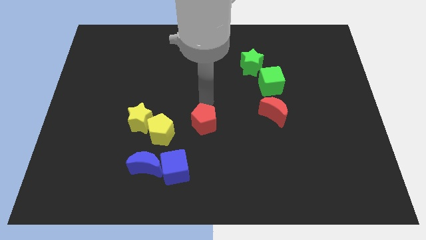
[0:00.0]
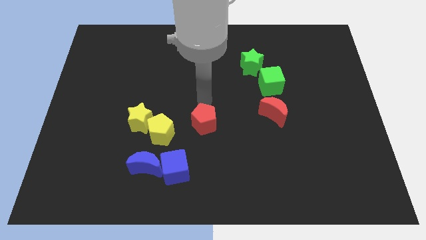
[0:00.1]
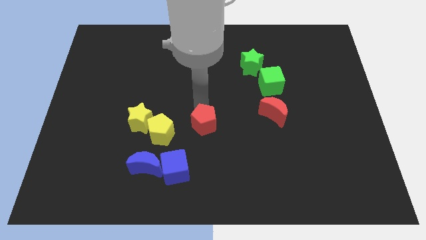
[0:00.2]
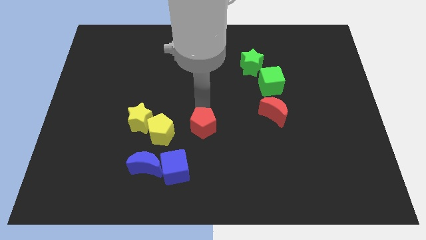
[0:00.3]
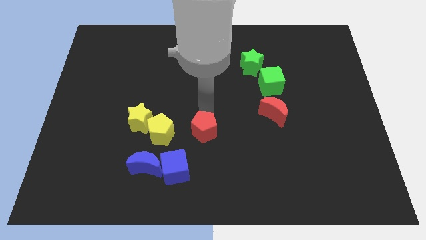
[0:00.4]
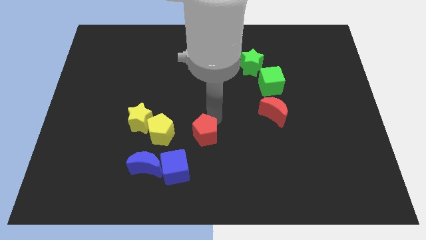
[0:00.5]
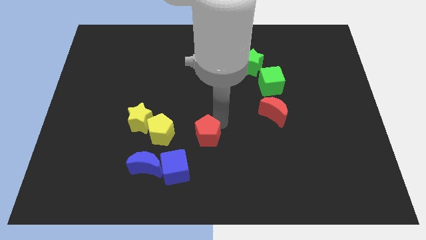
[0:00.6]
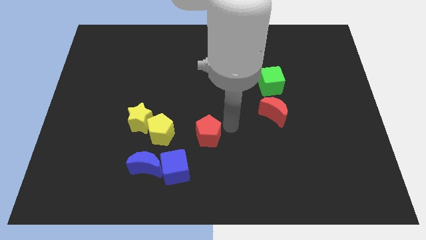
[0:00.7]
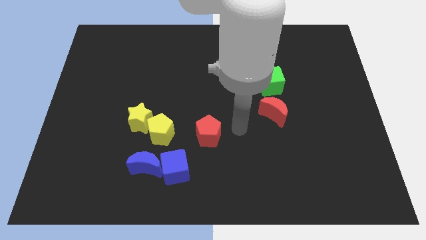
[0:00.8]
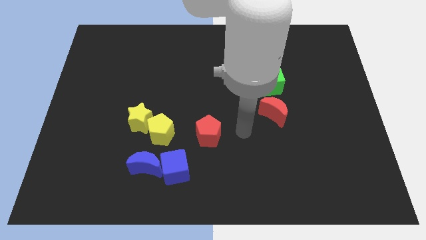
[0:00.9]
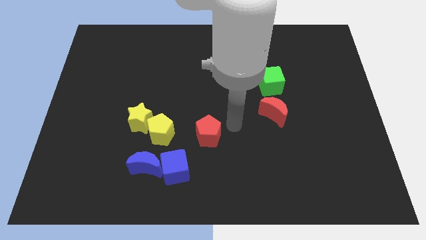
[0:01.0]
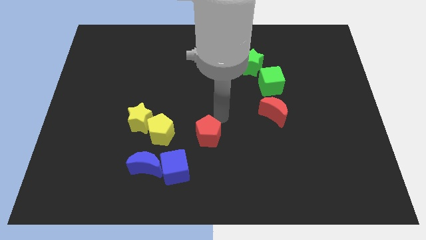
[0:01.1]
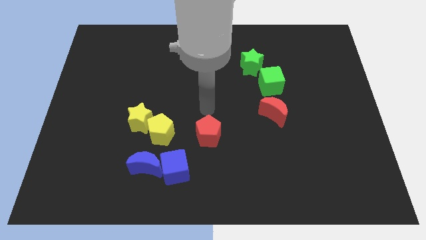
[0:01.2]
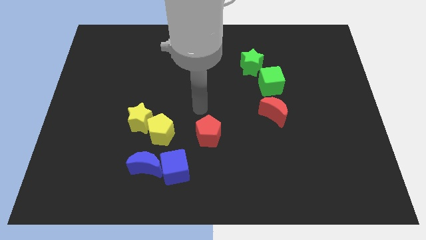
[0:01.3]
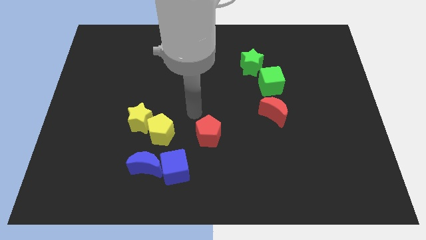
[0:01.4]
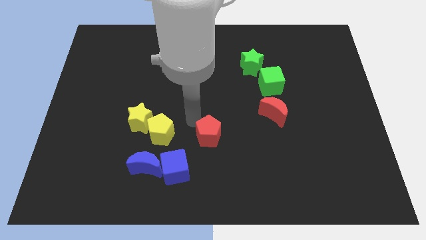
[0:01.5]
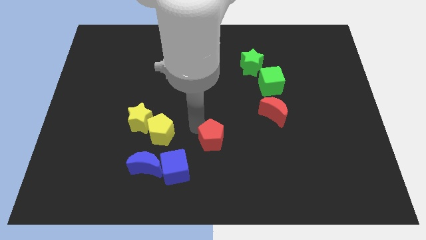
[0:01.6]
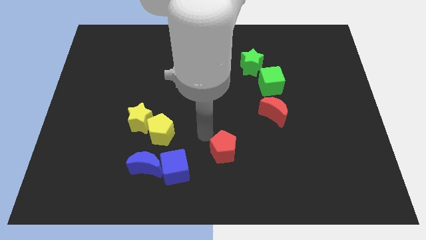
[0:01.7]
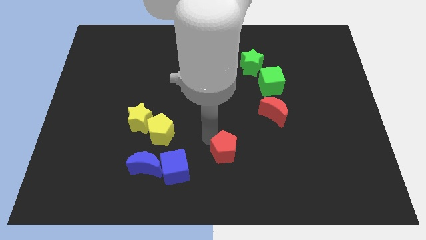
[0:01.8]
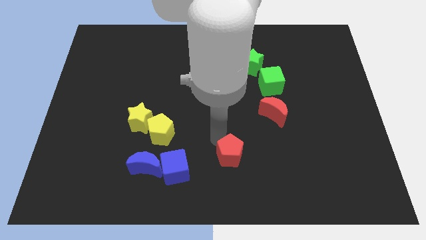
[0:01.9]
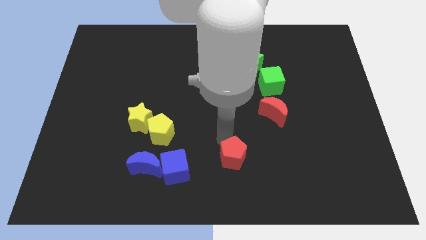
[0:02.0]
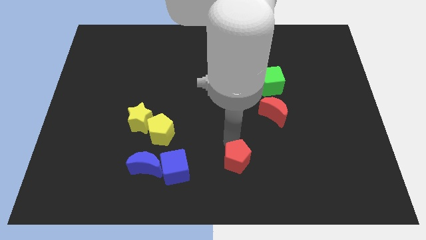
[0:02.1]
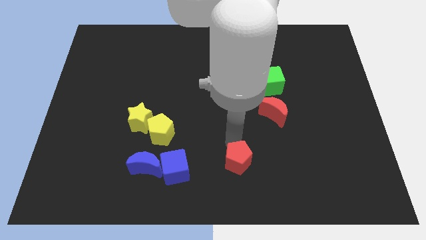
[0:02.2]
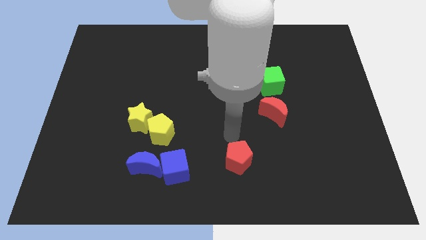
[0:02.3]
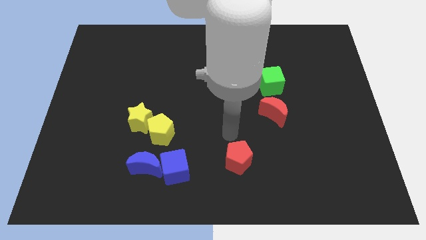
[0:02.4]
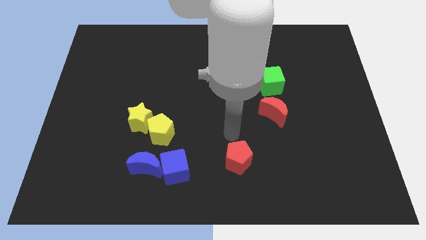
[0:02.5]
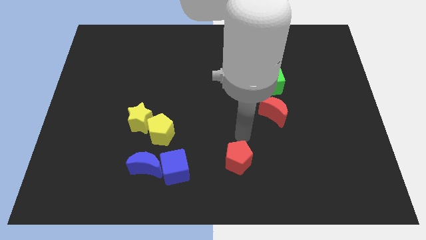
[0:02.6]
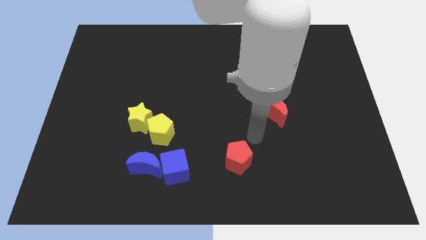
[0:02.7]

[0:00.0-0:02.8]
place the red pentagon to the right of the blue cube

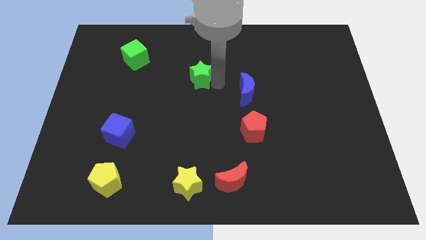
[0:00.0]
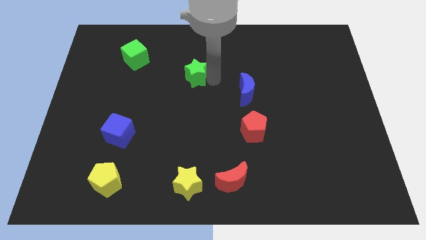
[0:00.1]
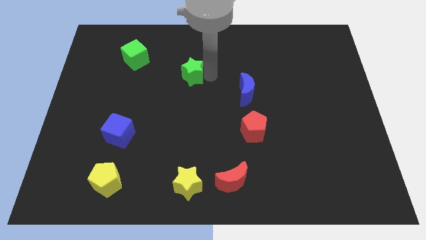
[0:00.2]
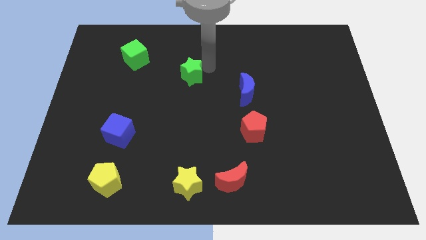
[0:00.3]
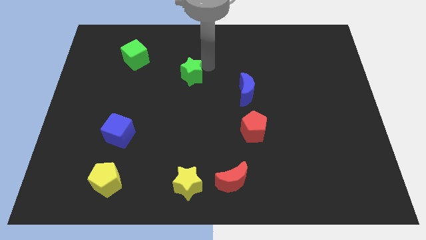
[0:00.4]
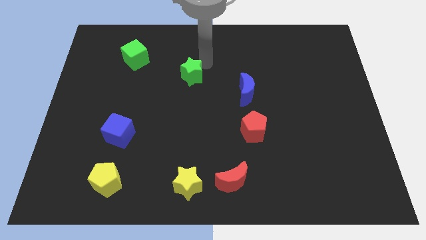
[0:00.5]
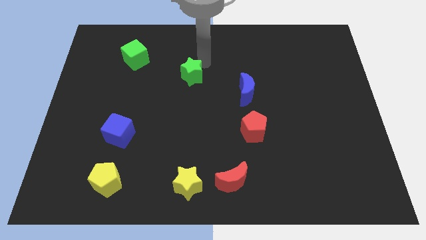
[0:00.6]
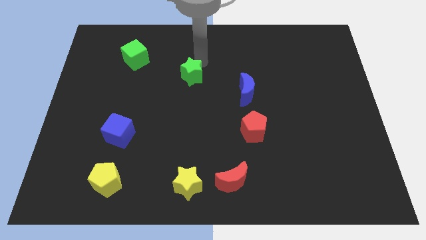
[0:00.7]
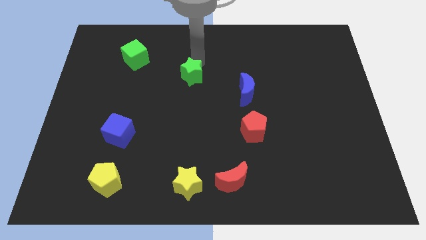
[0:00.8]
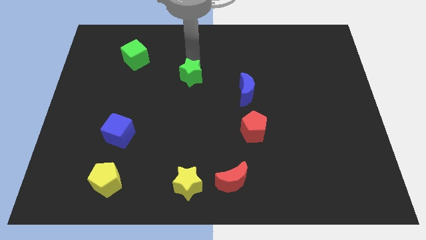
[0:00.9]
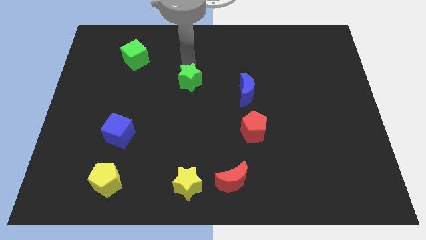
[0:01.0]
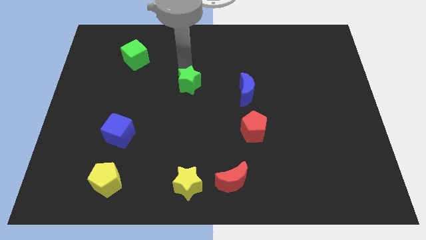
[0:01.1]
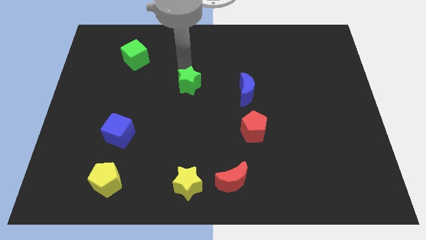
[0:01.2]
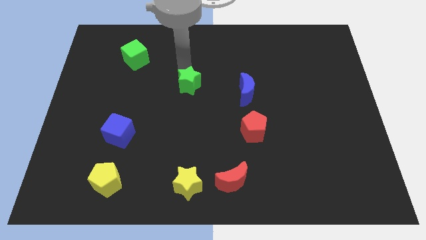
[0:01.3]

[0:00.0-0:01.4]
slide the green star above the yellow star

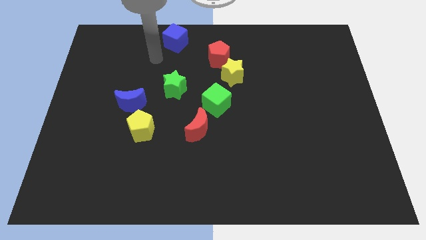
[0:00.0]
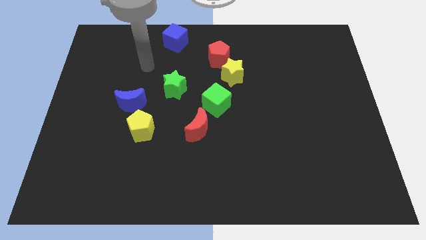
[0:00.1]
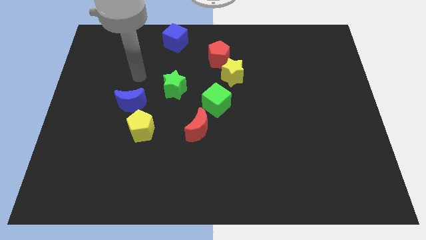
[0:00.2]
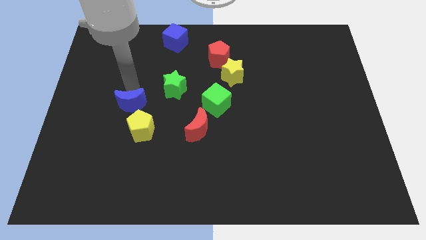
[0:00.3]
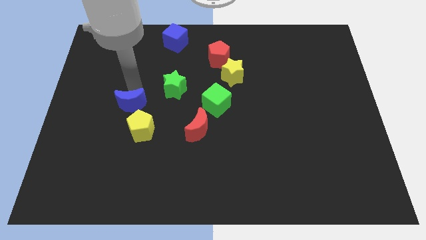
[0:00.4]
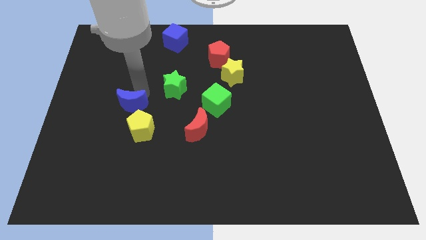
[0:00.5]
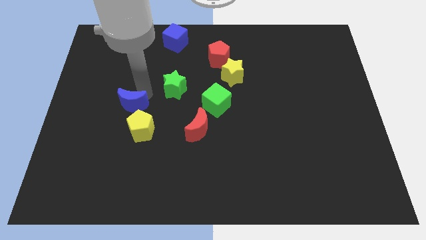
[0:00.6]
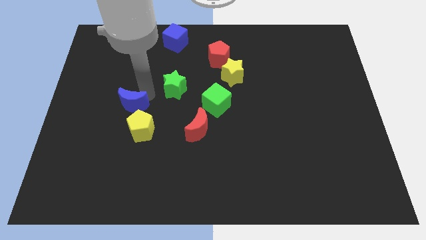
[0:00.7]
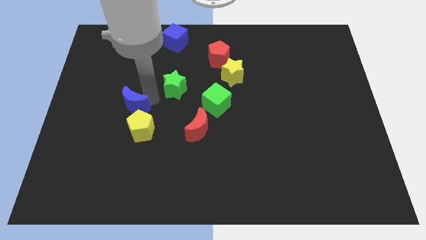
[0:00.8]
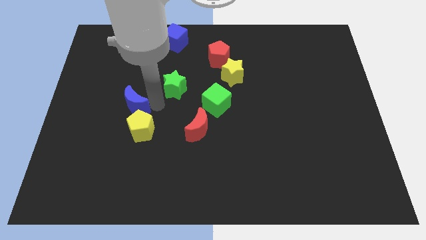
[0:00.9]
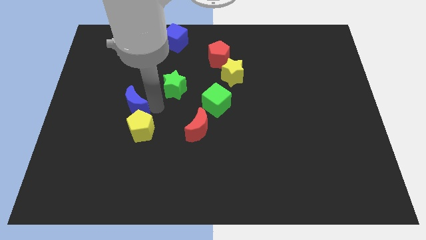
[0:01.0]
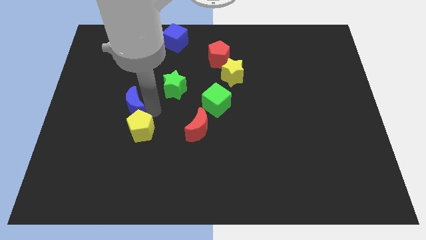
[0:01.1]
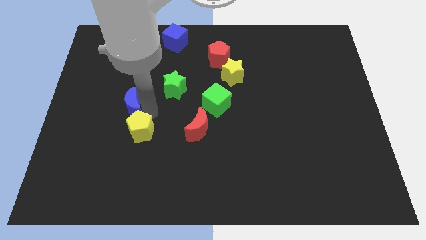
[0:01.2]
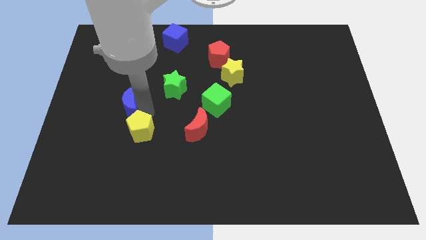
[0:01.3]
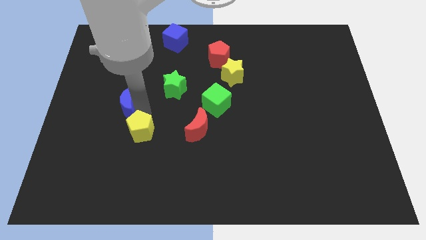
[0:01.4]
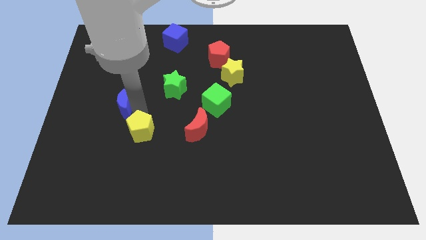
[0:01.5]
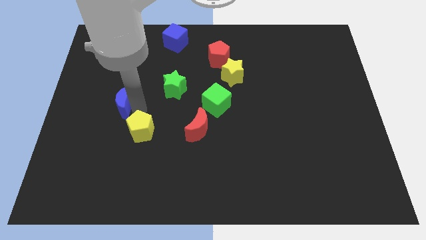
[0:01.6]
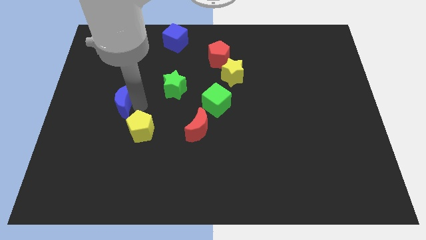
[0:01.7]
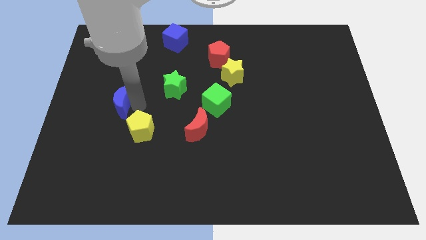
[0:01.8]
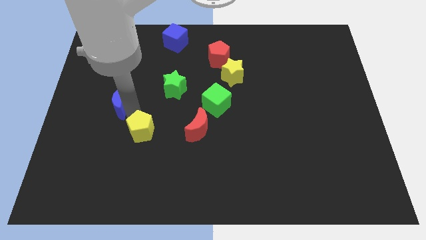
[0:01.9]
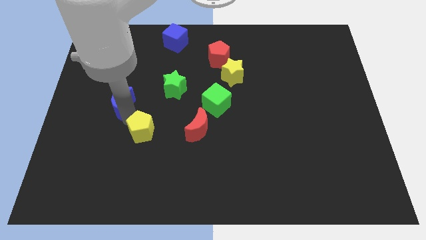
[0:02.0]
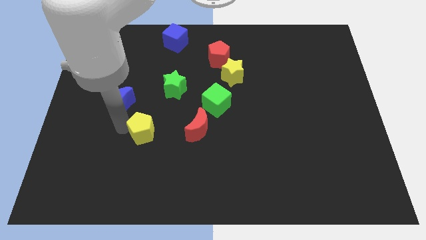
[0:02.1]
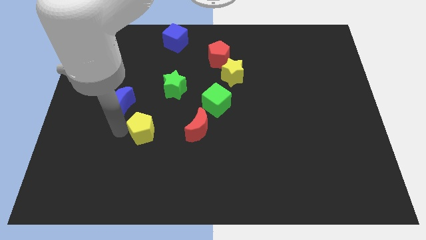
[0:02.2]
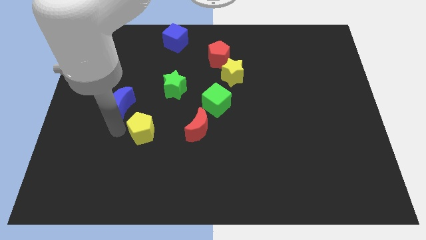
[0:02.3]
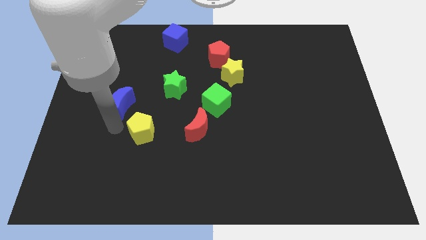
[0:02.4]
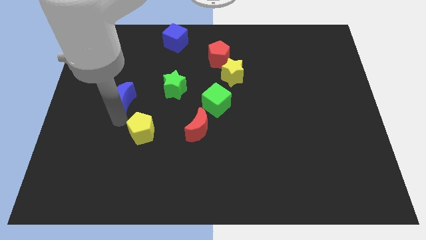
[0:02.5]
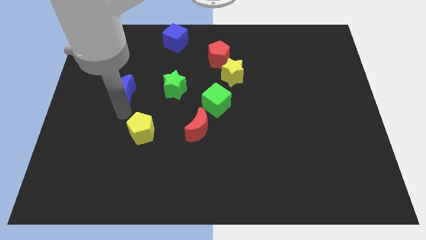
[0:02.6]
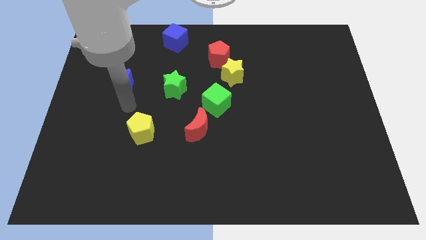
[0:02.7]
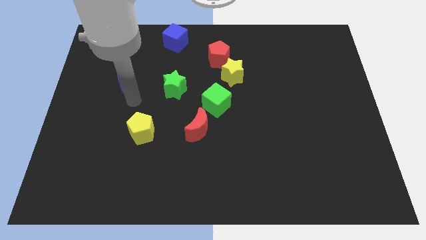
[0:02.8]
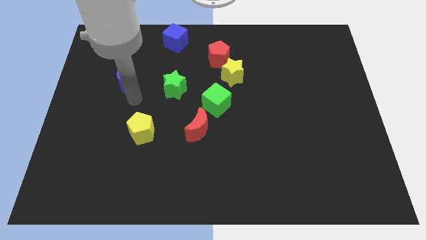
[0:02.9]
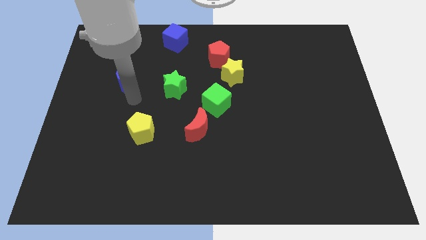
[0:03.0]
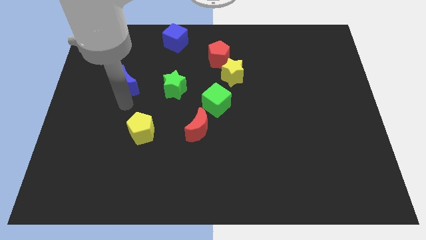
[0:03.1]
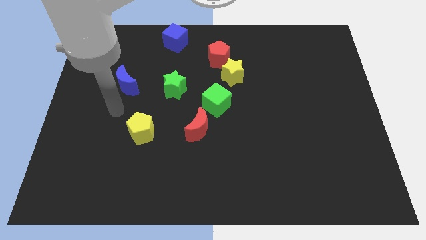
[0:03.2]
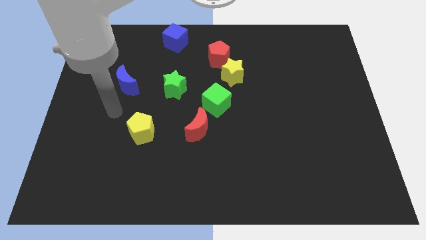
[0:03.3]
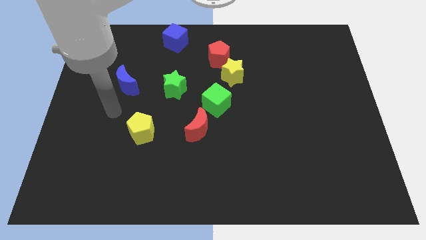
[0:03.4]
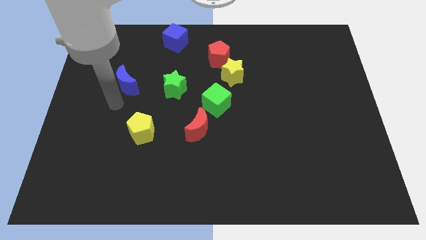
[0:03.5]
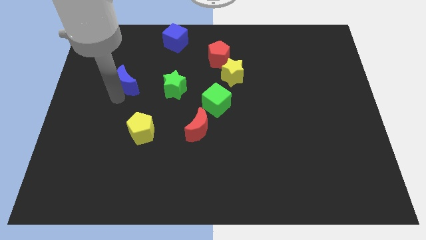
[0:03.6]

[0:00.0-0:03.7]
place the blue moon left to the green star

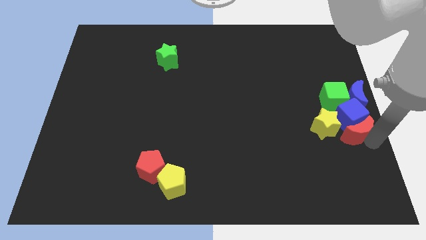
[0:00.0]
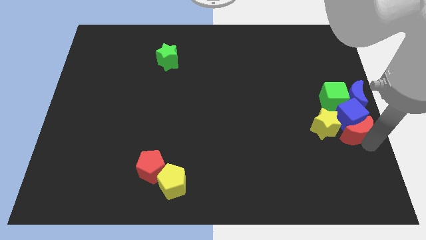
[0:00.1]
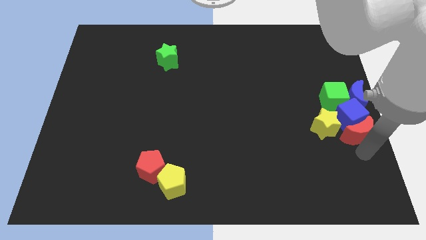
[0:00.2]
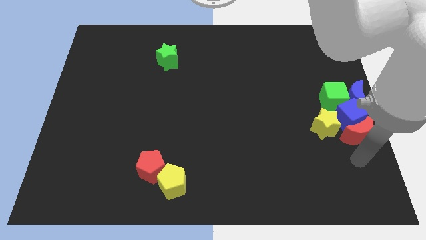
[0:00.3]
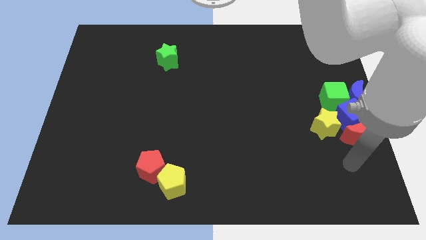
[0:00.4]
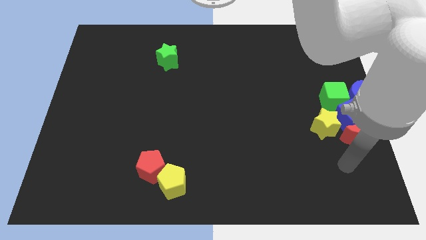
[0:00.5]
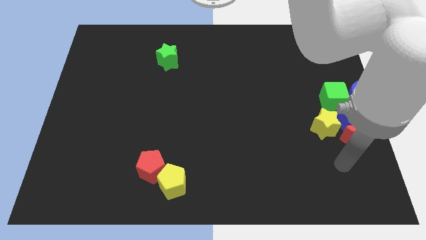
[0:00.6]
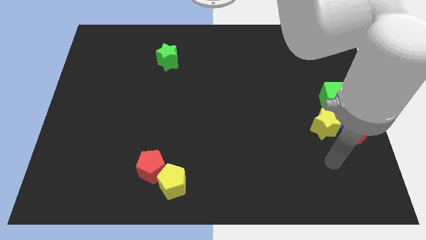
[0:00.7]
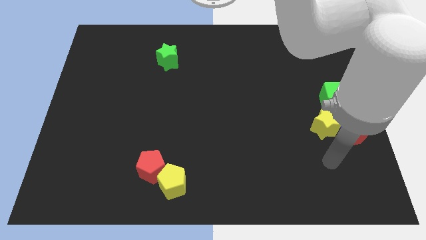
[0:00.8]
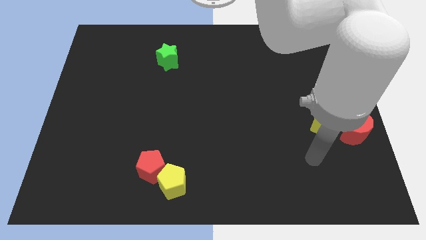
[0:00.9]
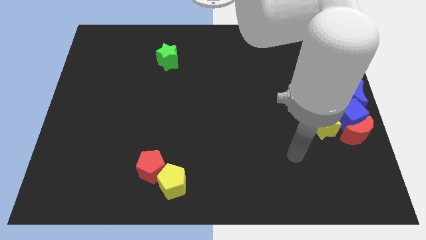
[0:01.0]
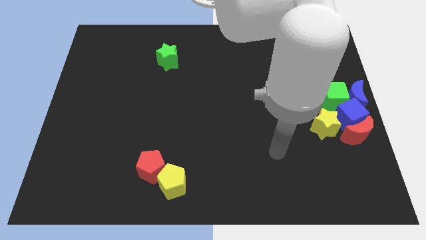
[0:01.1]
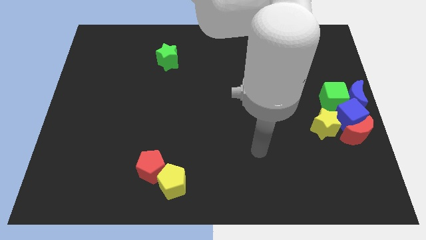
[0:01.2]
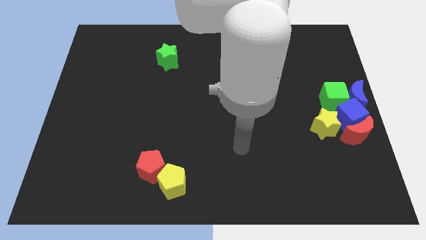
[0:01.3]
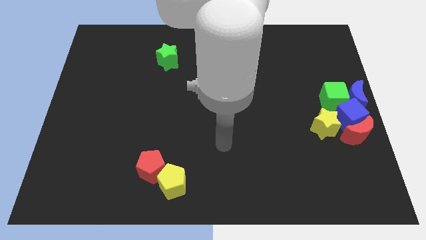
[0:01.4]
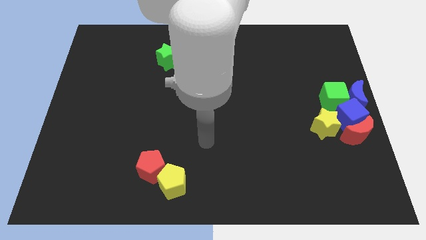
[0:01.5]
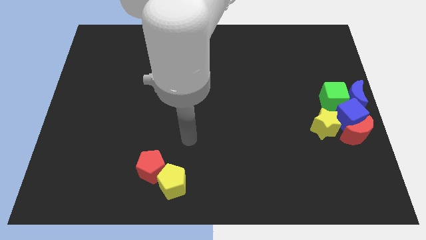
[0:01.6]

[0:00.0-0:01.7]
move your arm away from red moon
